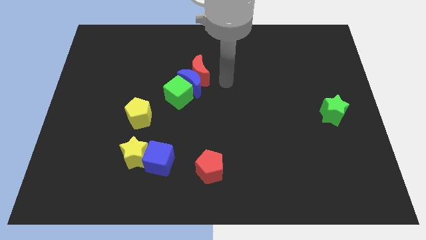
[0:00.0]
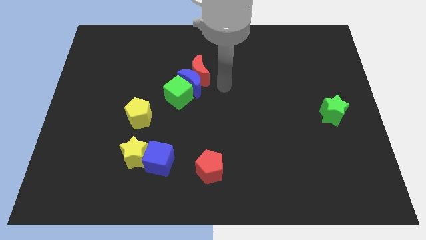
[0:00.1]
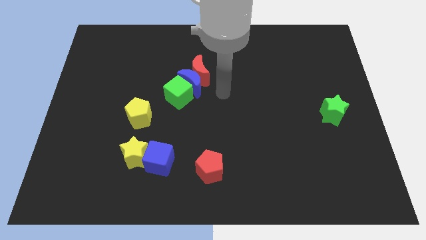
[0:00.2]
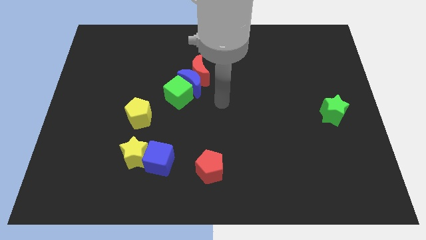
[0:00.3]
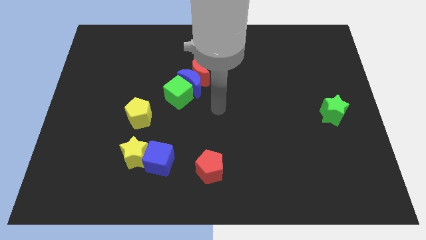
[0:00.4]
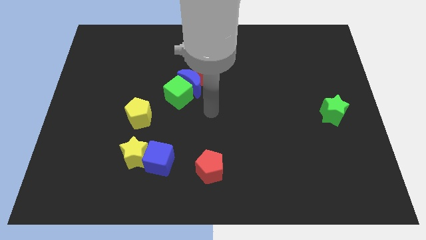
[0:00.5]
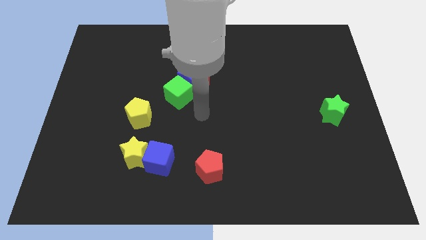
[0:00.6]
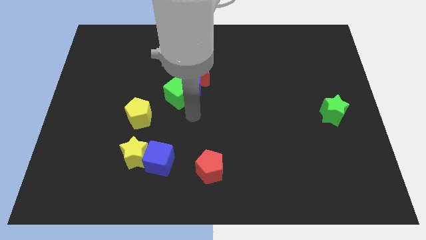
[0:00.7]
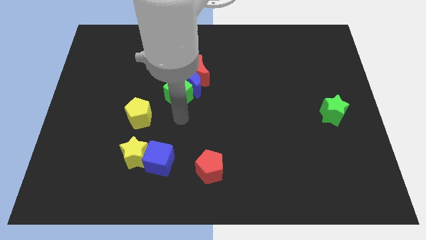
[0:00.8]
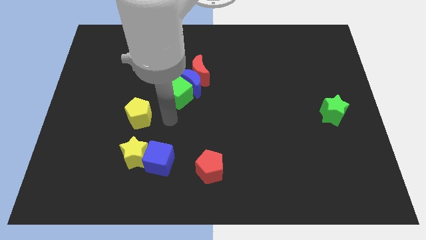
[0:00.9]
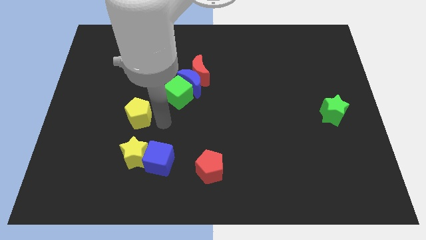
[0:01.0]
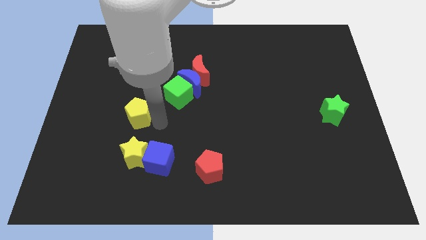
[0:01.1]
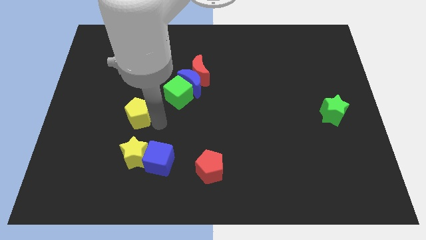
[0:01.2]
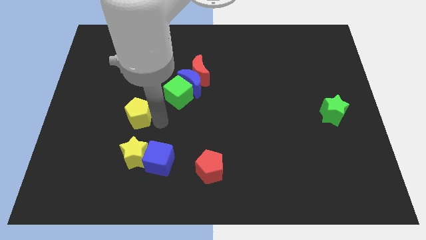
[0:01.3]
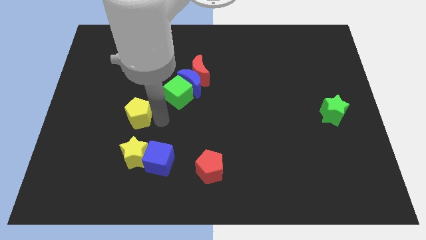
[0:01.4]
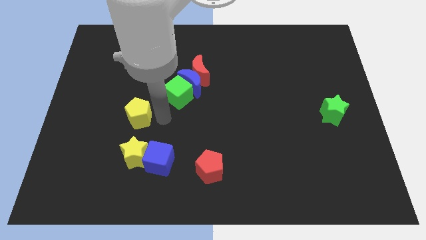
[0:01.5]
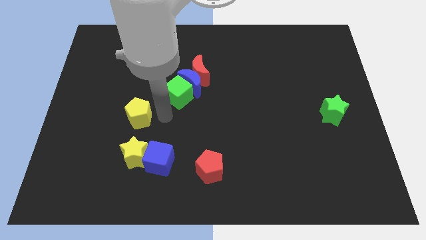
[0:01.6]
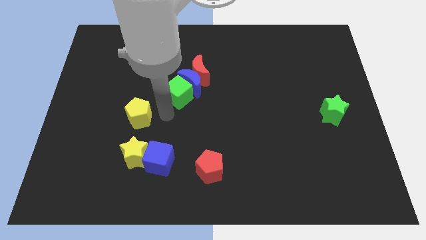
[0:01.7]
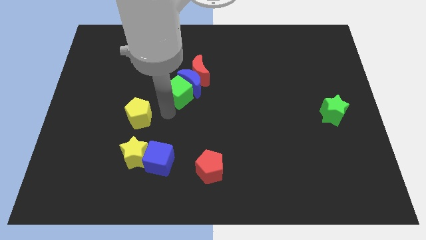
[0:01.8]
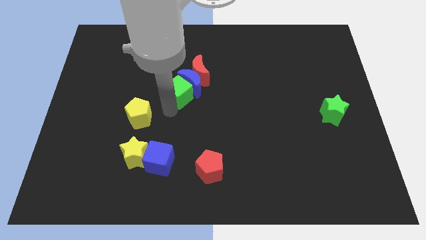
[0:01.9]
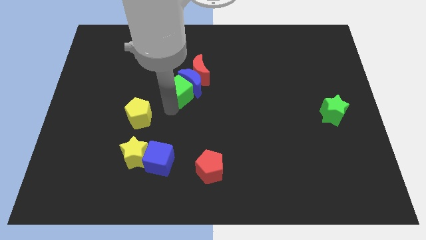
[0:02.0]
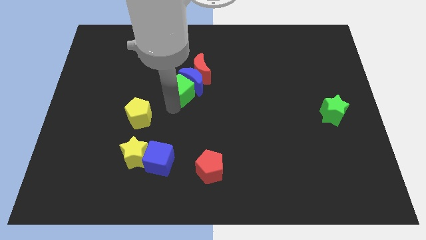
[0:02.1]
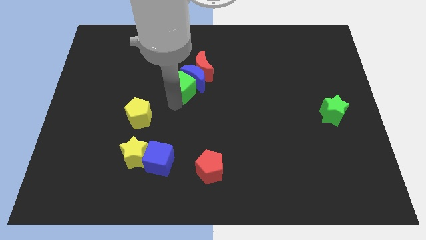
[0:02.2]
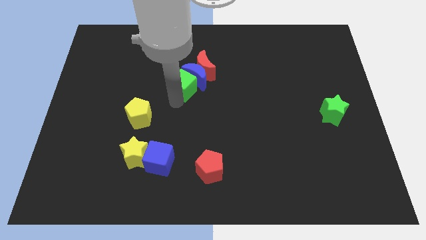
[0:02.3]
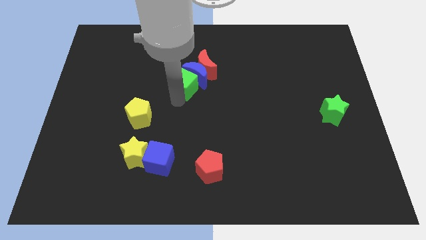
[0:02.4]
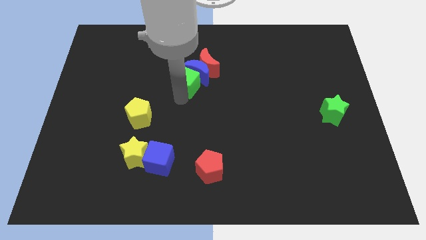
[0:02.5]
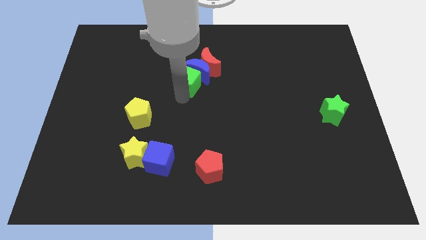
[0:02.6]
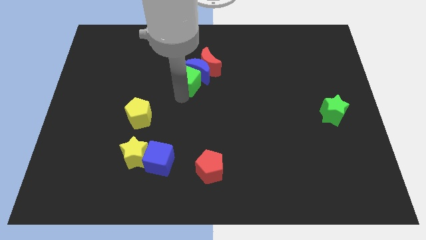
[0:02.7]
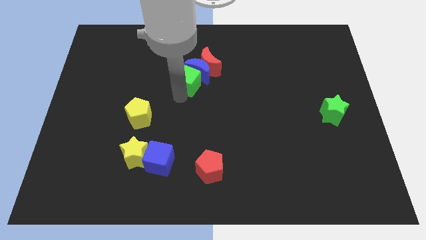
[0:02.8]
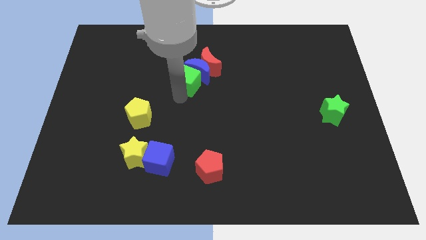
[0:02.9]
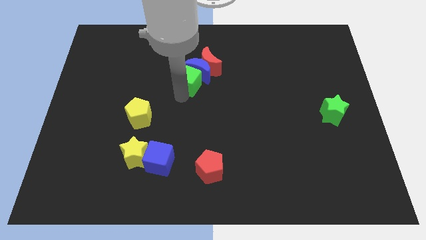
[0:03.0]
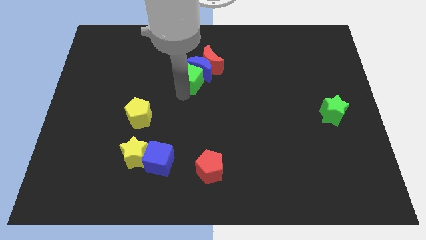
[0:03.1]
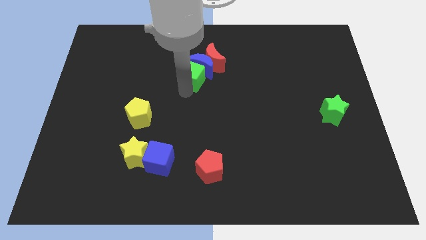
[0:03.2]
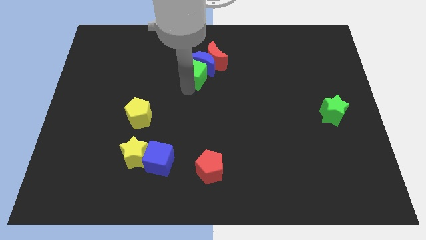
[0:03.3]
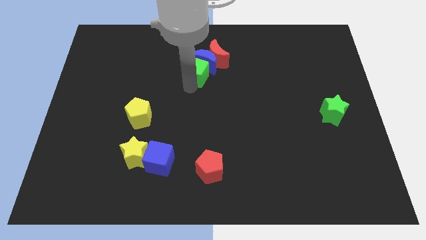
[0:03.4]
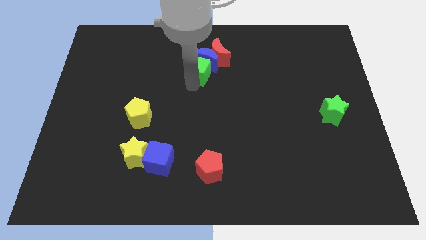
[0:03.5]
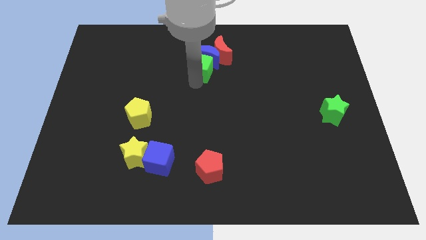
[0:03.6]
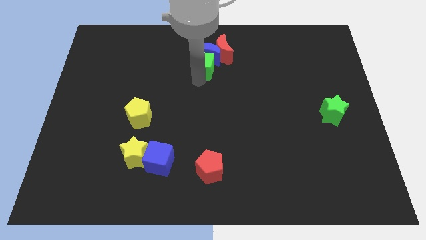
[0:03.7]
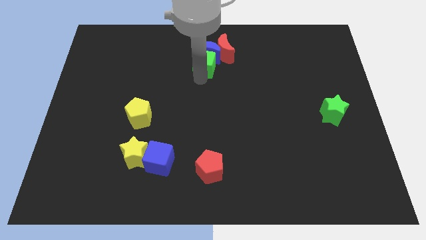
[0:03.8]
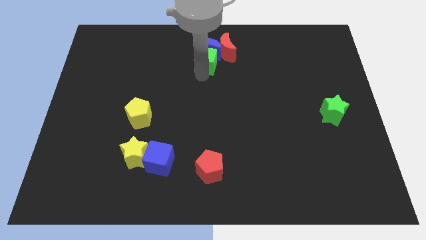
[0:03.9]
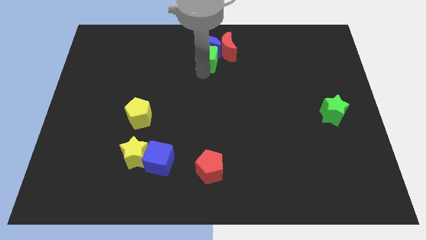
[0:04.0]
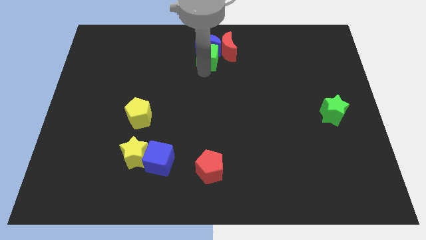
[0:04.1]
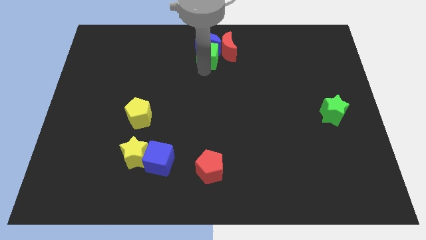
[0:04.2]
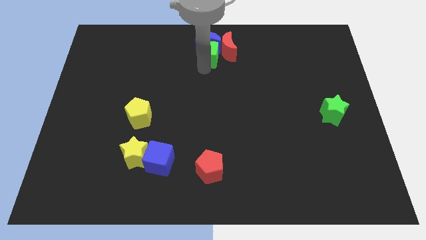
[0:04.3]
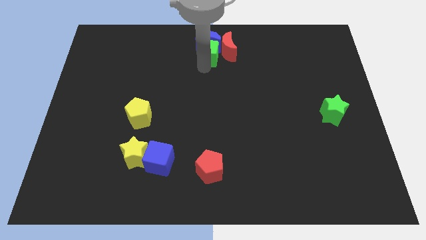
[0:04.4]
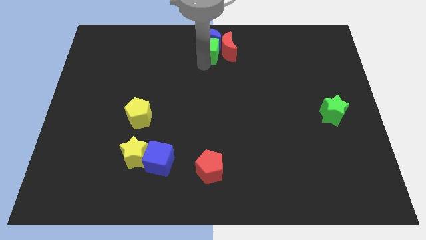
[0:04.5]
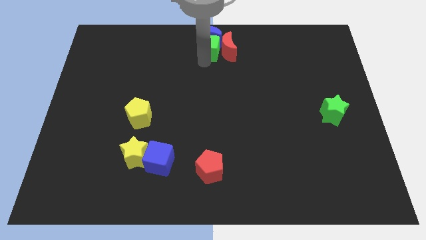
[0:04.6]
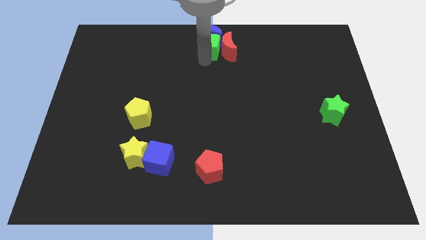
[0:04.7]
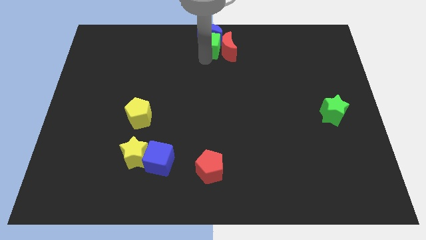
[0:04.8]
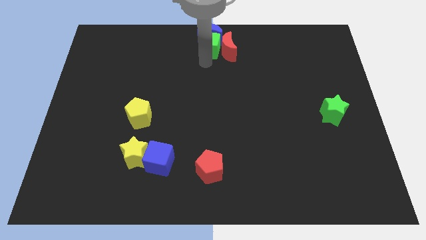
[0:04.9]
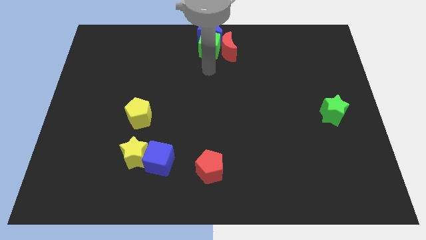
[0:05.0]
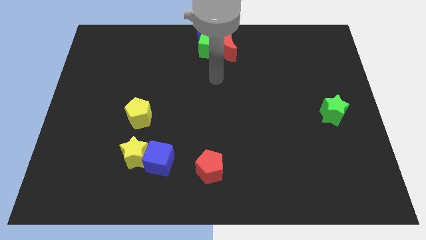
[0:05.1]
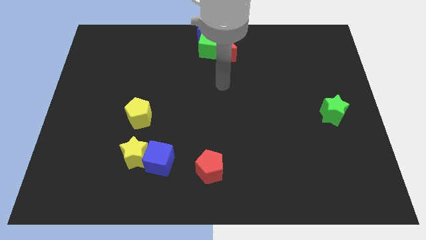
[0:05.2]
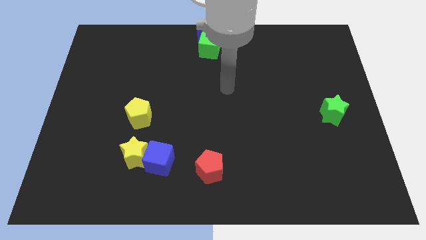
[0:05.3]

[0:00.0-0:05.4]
push the blue crescent to the top center of the board with the green cube

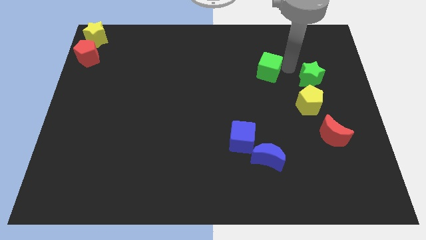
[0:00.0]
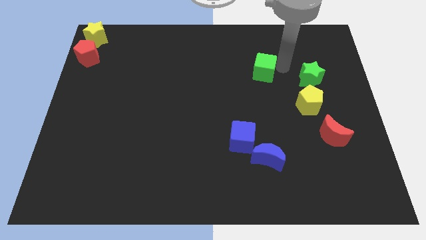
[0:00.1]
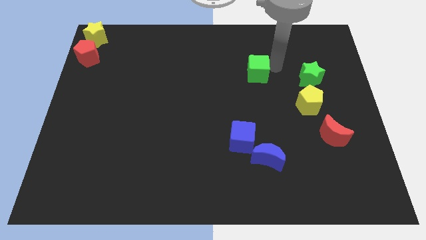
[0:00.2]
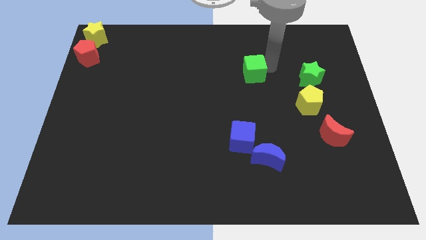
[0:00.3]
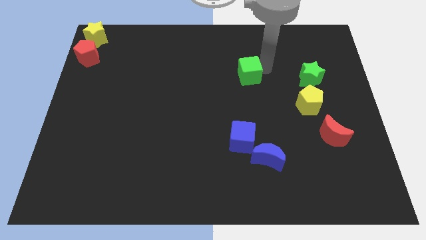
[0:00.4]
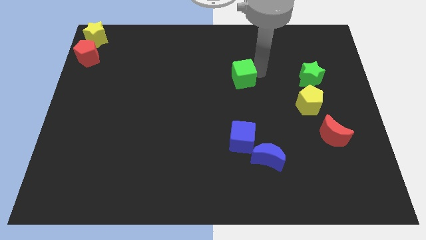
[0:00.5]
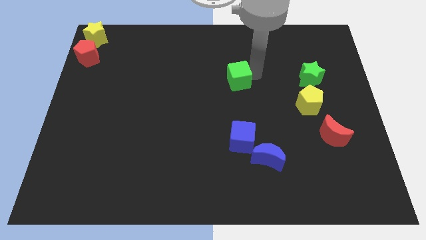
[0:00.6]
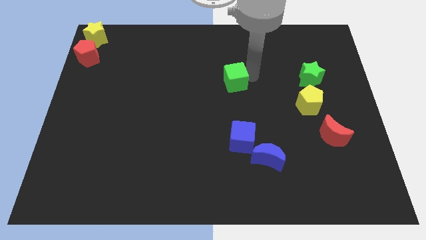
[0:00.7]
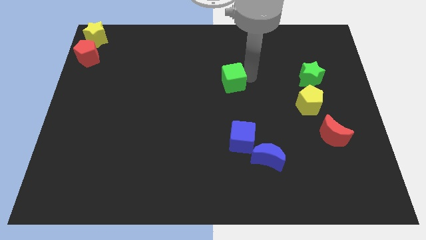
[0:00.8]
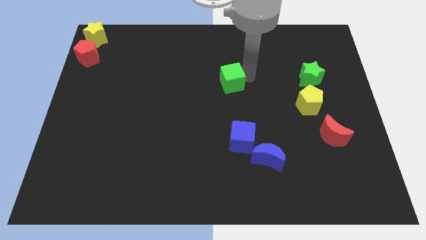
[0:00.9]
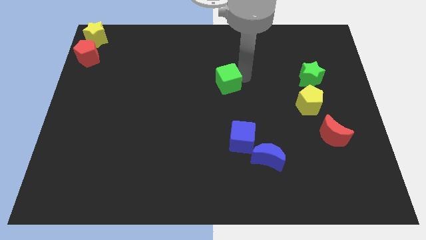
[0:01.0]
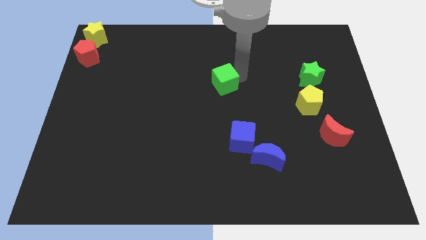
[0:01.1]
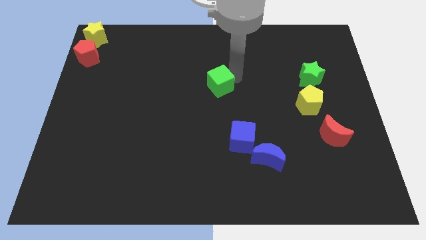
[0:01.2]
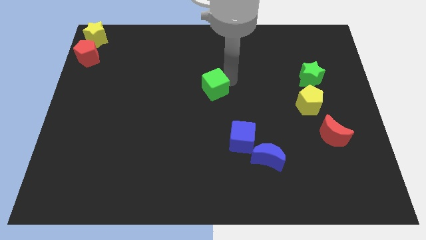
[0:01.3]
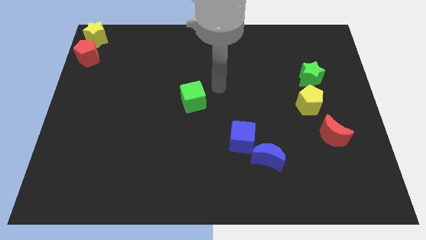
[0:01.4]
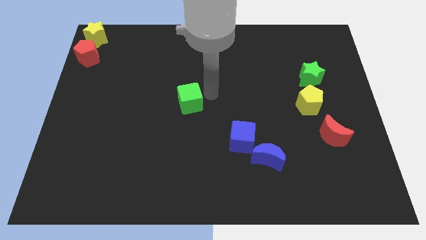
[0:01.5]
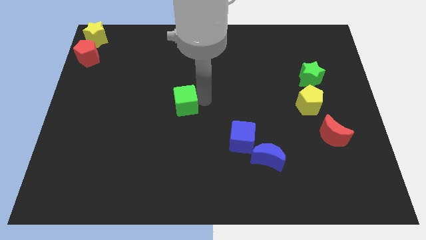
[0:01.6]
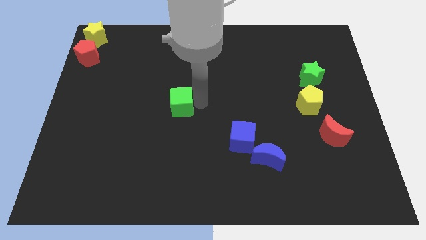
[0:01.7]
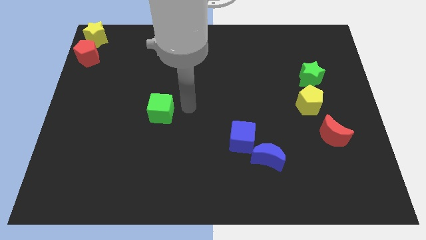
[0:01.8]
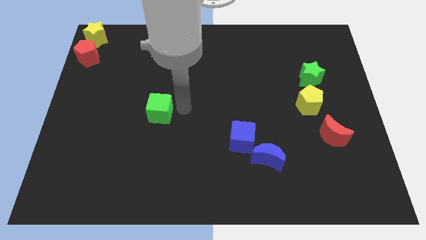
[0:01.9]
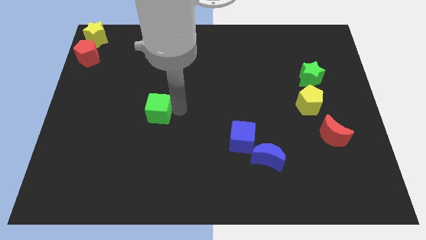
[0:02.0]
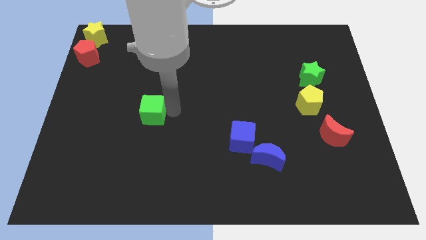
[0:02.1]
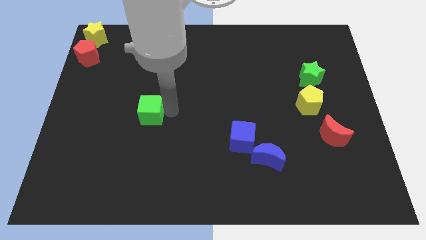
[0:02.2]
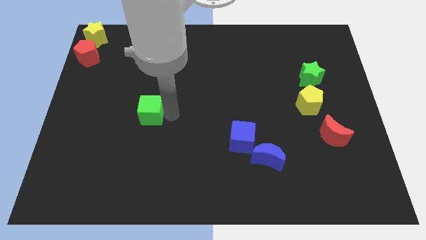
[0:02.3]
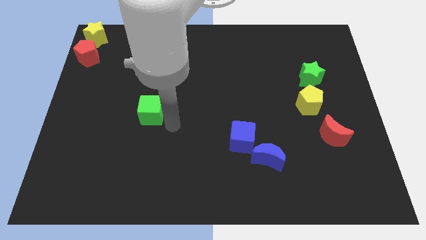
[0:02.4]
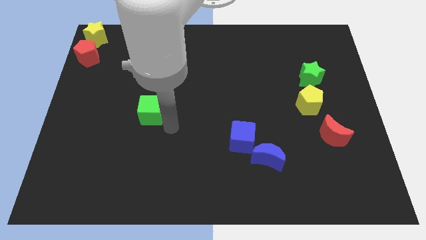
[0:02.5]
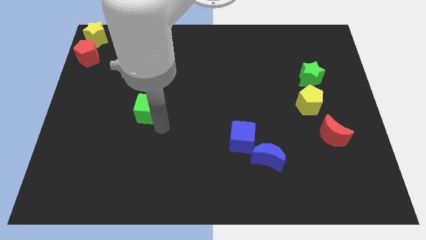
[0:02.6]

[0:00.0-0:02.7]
push the green cube towards the bottom side of the board

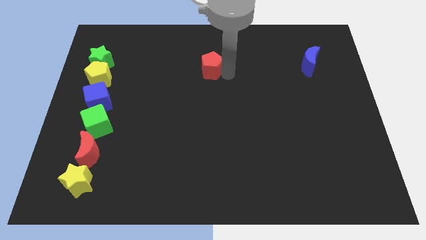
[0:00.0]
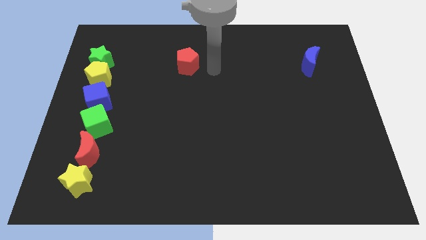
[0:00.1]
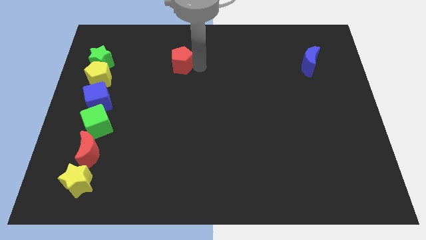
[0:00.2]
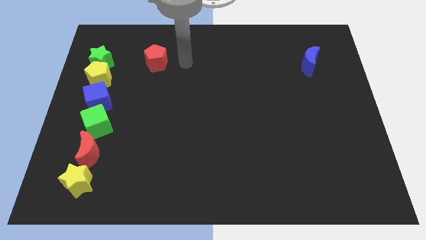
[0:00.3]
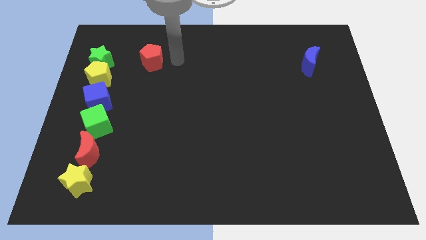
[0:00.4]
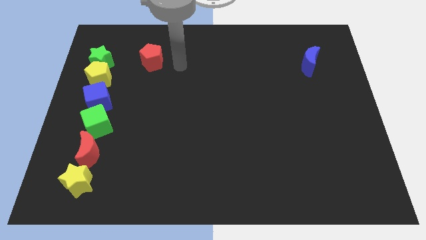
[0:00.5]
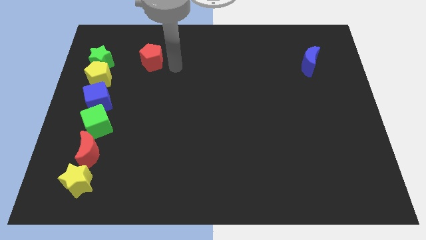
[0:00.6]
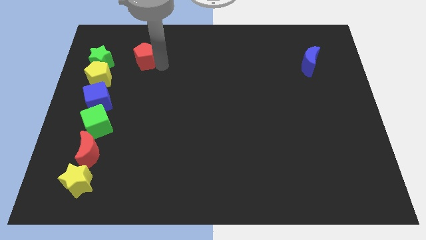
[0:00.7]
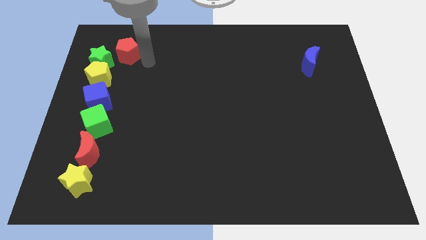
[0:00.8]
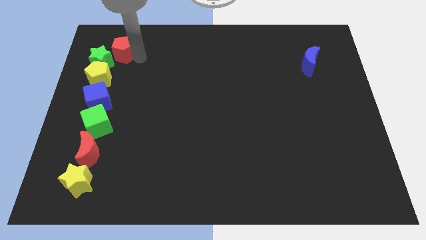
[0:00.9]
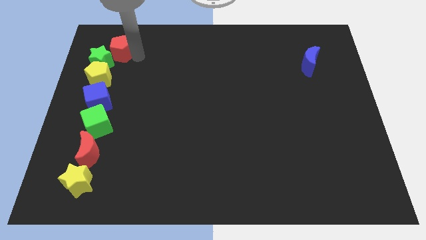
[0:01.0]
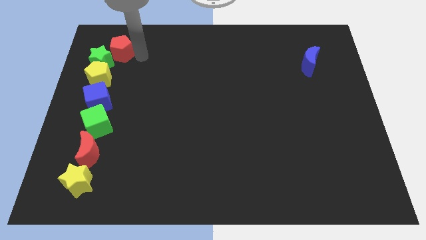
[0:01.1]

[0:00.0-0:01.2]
push the red pentagon to the top right of the green star
